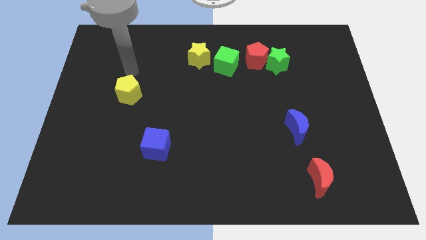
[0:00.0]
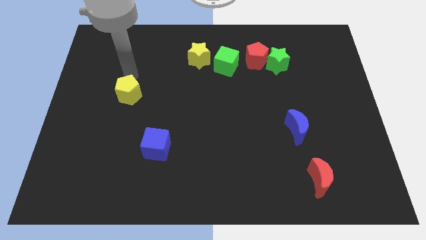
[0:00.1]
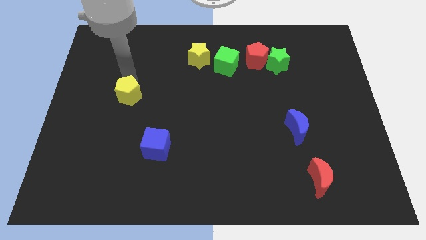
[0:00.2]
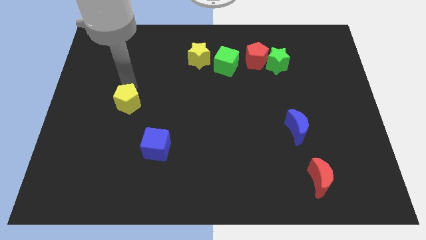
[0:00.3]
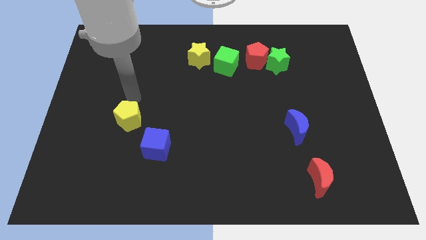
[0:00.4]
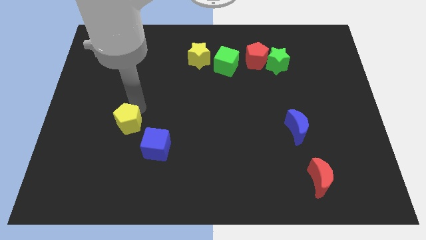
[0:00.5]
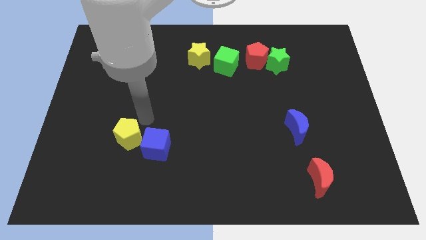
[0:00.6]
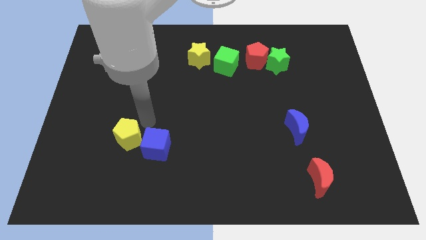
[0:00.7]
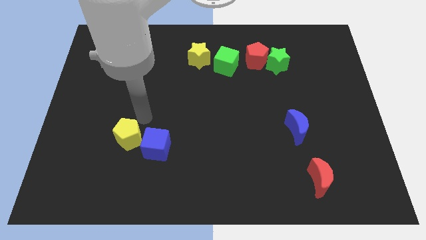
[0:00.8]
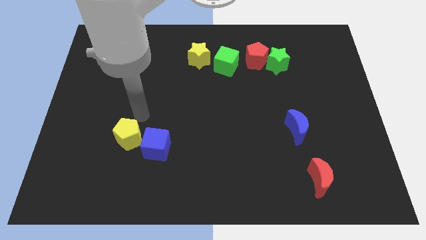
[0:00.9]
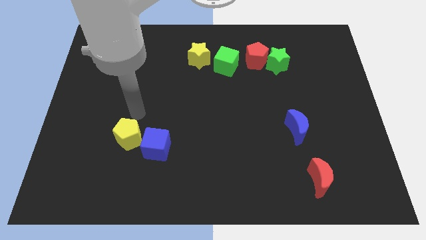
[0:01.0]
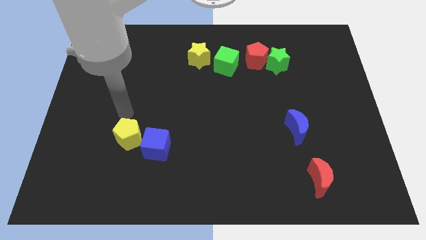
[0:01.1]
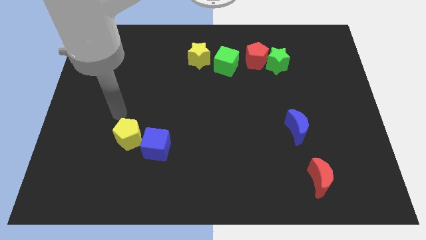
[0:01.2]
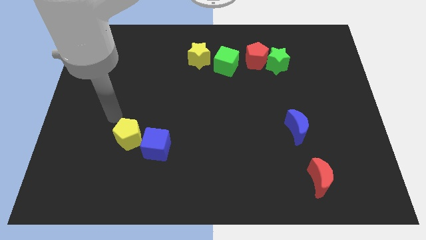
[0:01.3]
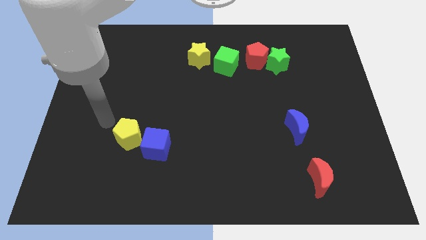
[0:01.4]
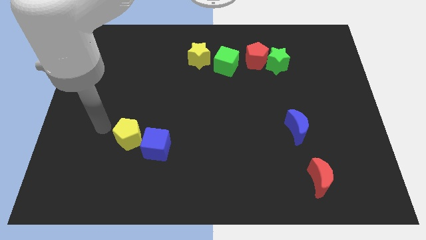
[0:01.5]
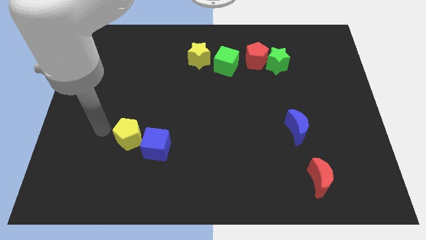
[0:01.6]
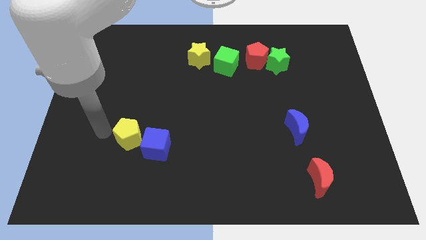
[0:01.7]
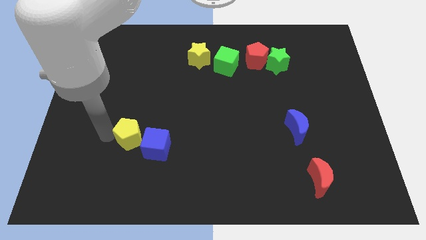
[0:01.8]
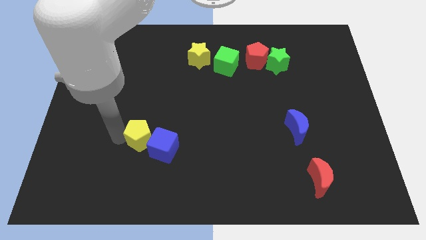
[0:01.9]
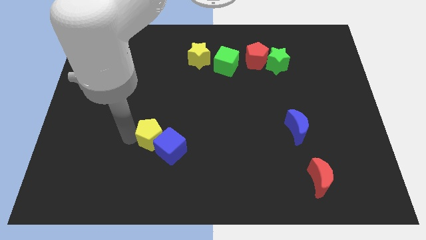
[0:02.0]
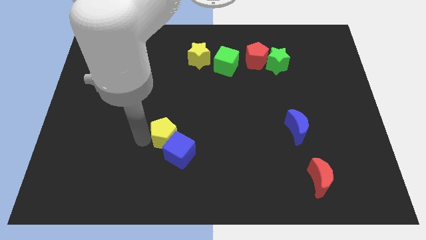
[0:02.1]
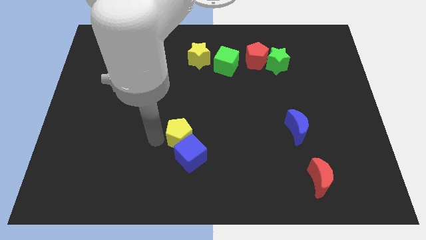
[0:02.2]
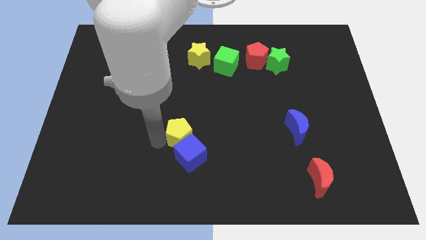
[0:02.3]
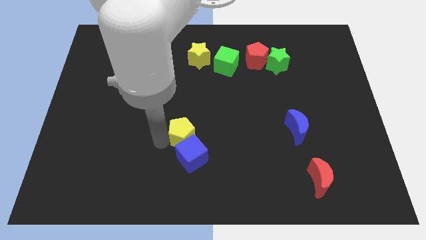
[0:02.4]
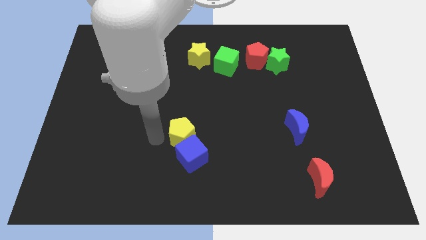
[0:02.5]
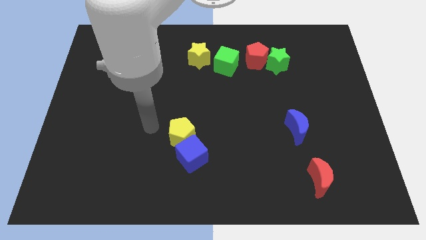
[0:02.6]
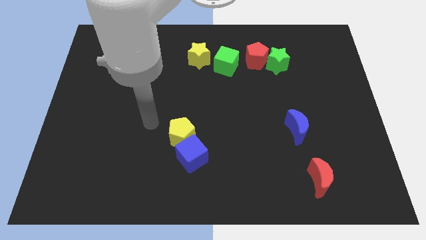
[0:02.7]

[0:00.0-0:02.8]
move the yellow star into the blue cube

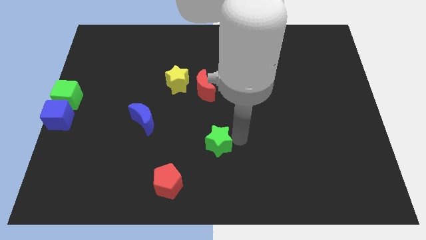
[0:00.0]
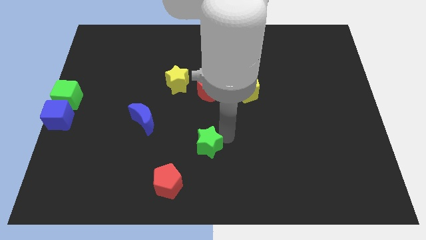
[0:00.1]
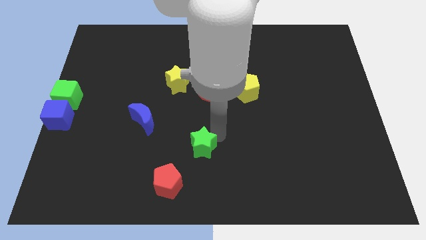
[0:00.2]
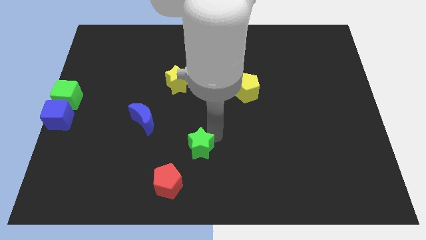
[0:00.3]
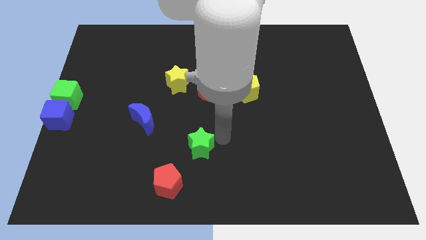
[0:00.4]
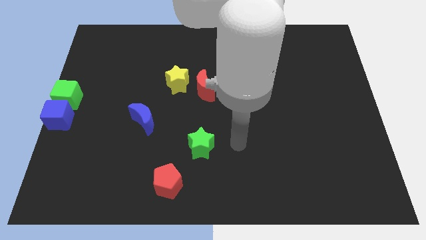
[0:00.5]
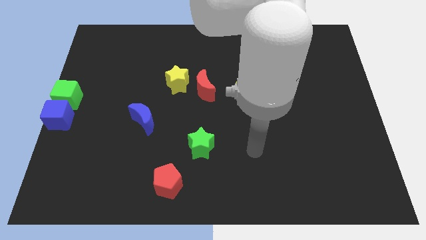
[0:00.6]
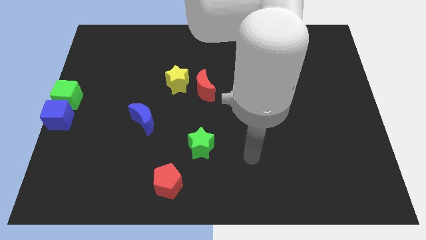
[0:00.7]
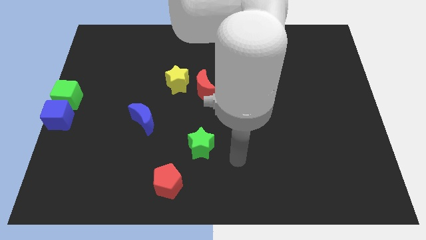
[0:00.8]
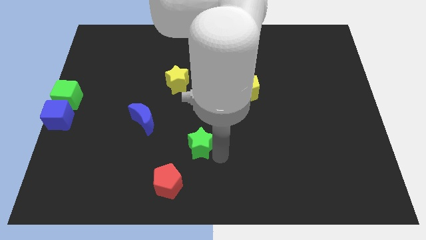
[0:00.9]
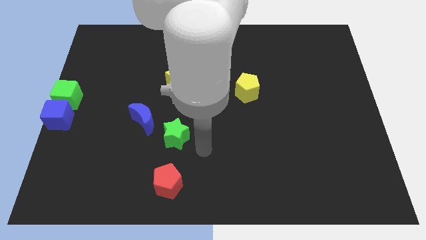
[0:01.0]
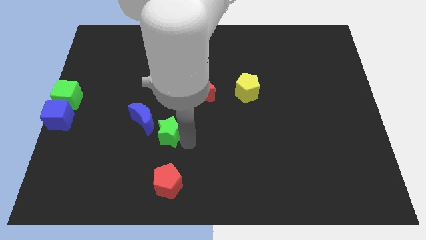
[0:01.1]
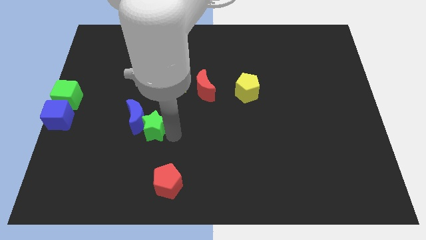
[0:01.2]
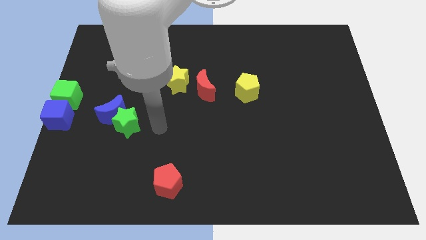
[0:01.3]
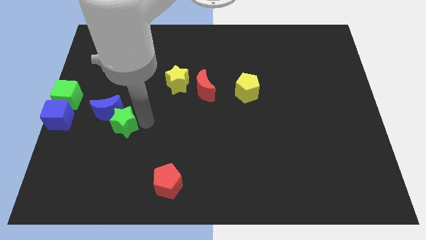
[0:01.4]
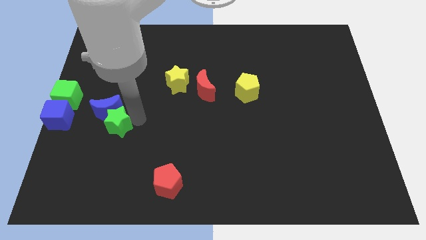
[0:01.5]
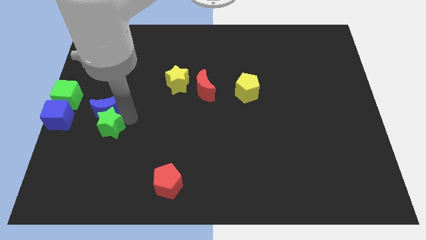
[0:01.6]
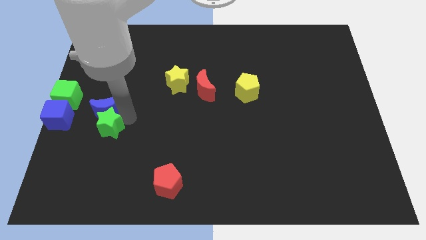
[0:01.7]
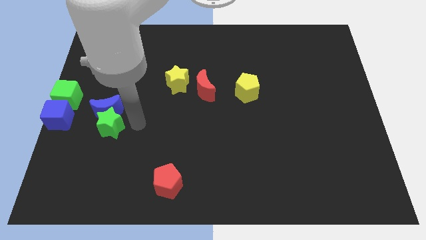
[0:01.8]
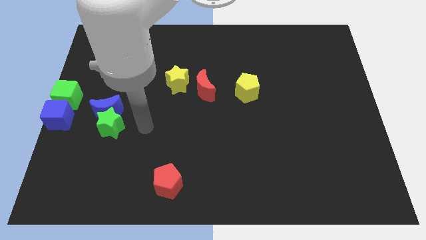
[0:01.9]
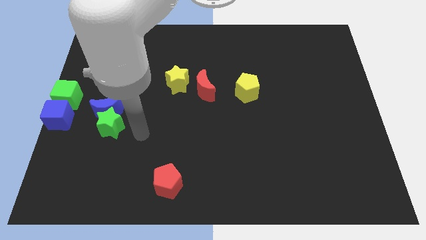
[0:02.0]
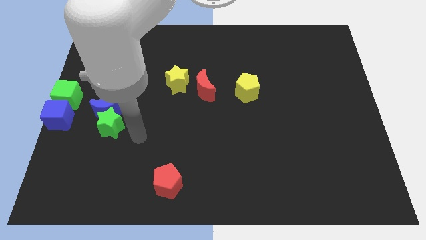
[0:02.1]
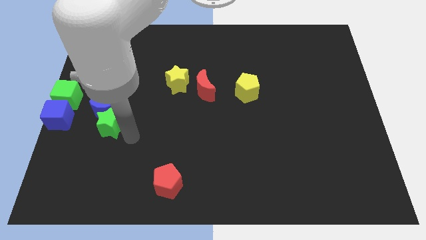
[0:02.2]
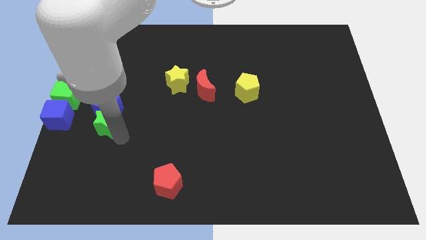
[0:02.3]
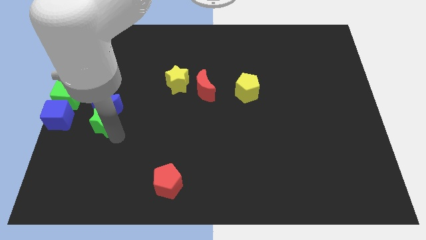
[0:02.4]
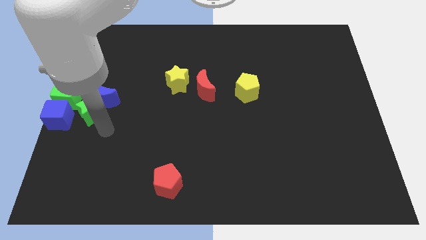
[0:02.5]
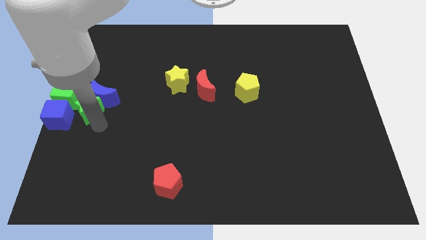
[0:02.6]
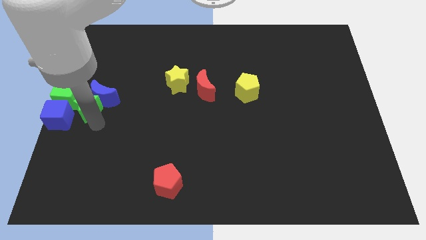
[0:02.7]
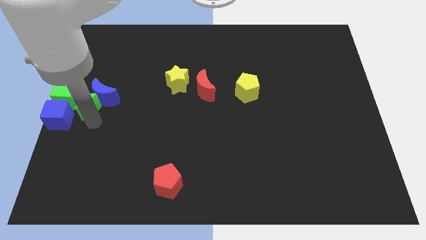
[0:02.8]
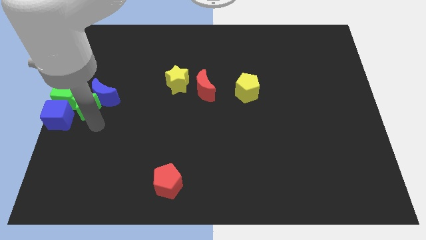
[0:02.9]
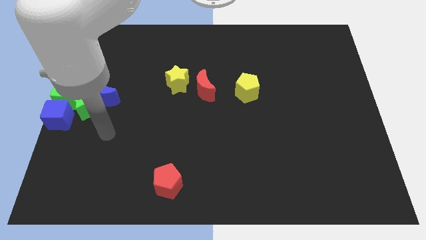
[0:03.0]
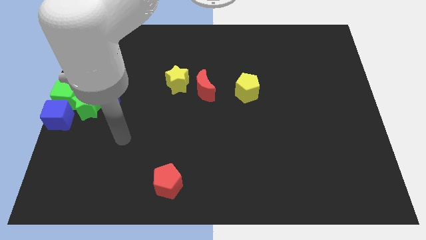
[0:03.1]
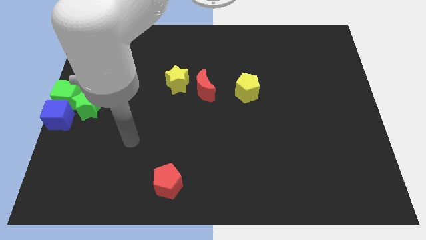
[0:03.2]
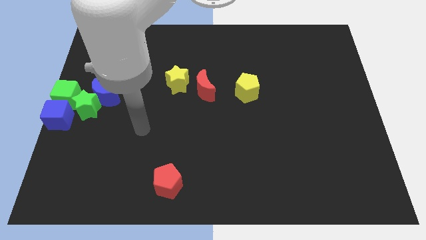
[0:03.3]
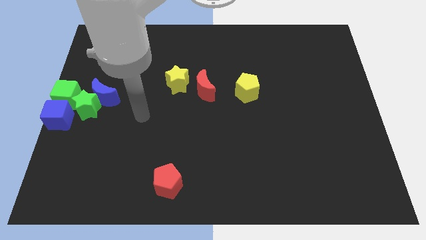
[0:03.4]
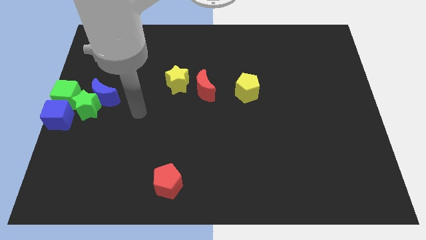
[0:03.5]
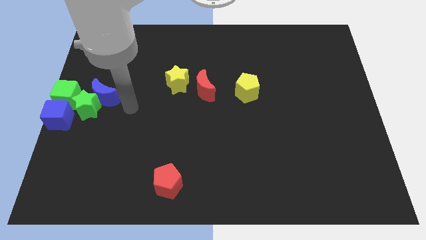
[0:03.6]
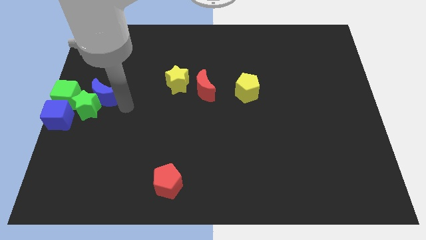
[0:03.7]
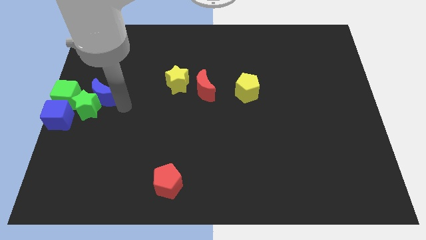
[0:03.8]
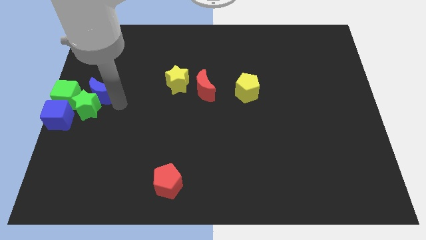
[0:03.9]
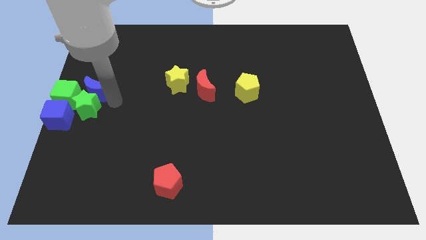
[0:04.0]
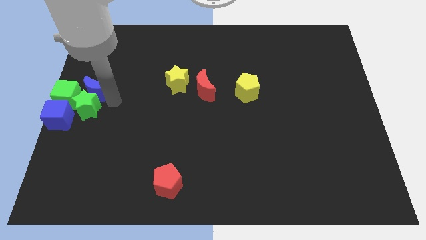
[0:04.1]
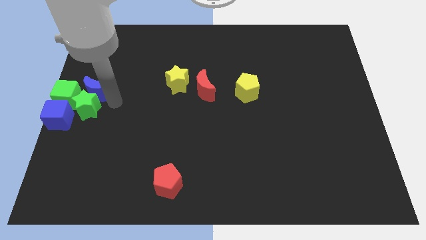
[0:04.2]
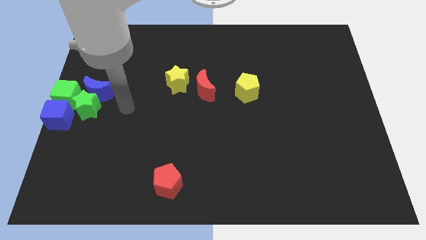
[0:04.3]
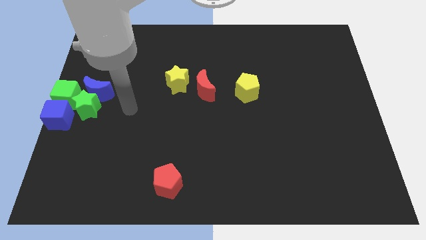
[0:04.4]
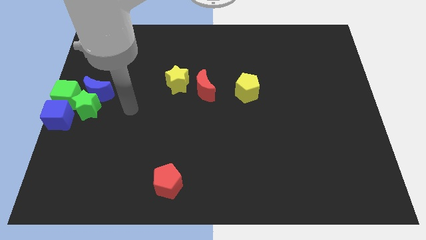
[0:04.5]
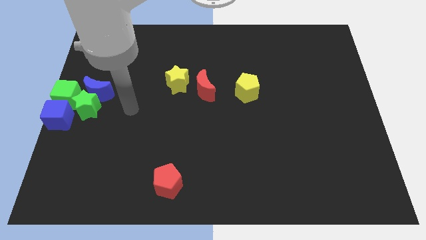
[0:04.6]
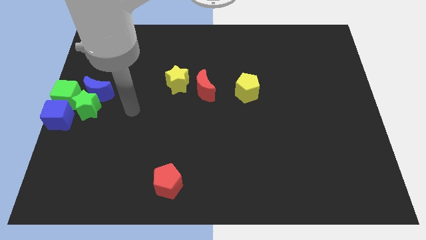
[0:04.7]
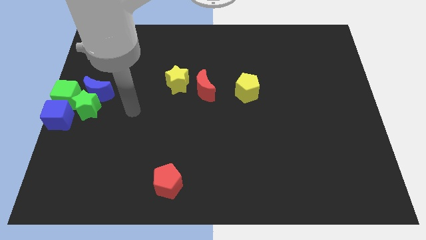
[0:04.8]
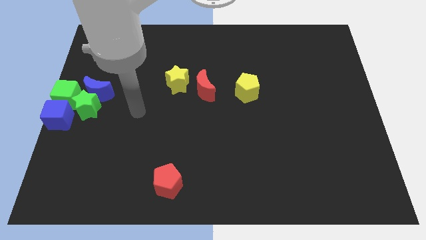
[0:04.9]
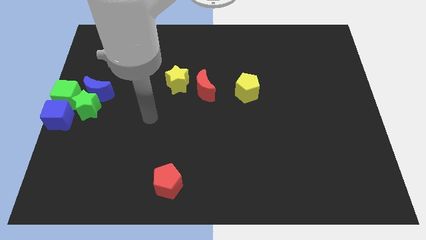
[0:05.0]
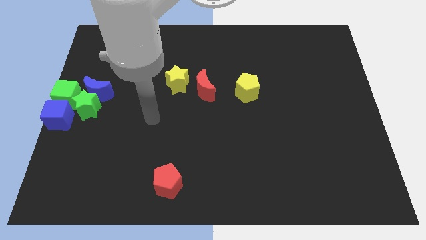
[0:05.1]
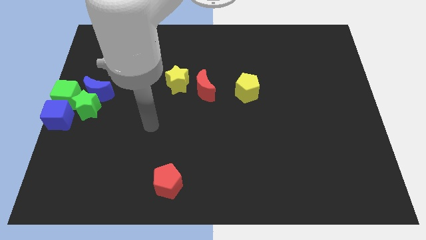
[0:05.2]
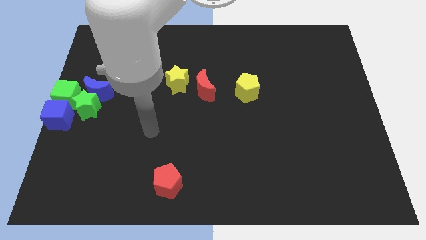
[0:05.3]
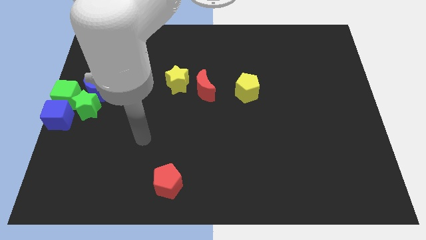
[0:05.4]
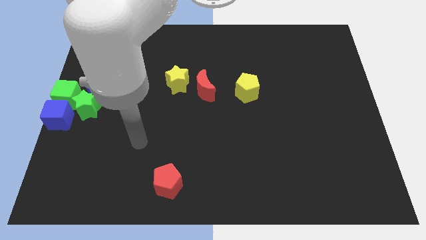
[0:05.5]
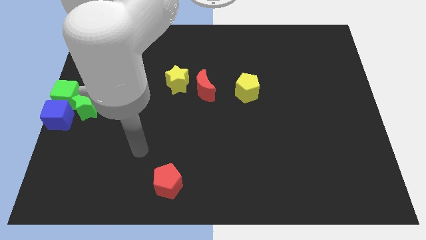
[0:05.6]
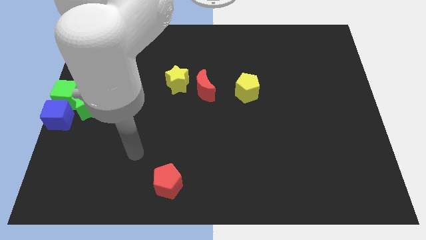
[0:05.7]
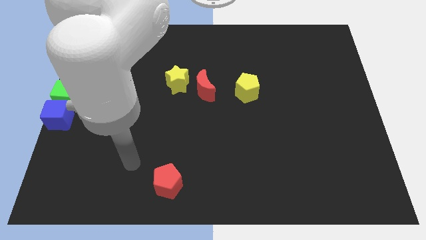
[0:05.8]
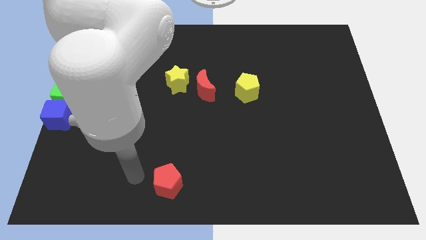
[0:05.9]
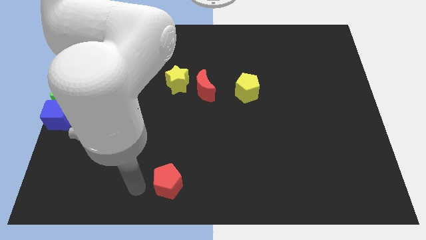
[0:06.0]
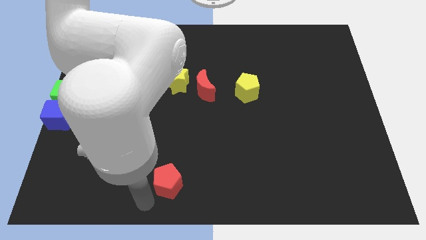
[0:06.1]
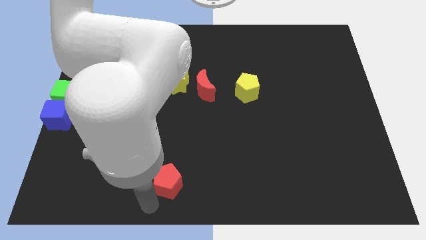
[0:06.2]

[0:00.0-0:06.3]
move the green star and blue moon to the center left
